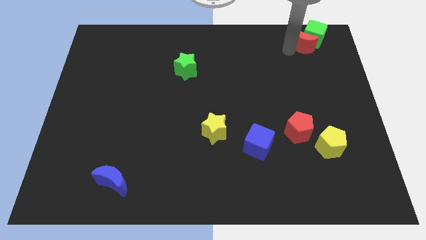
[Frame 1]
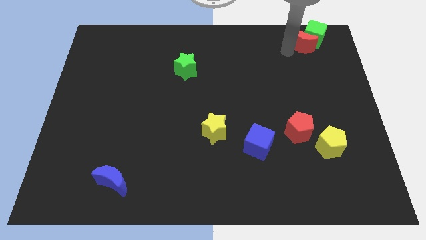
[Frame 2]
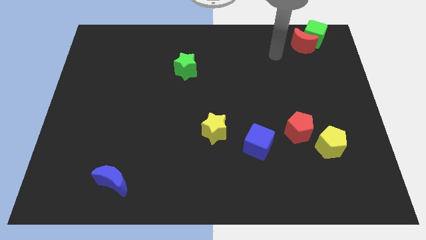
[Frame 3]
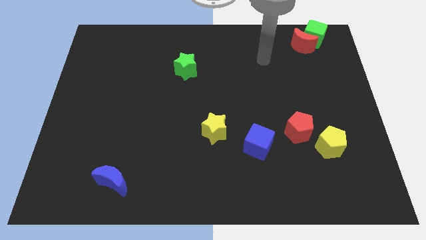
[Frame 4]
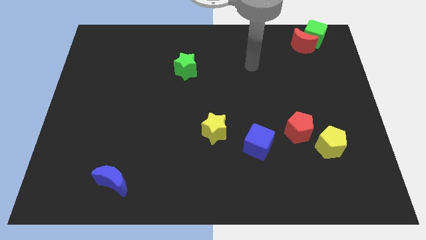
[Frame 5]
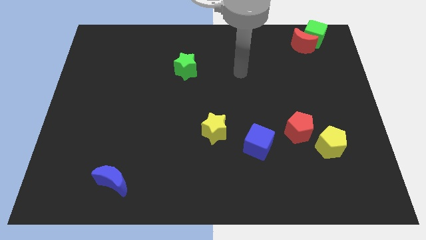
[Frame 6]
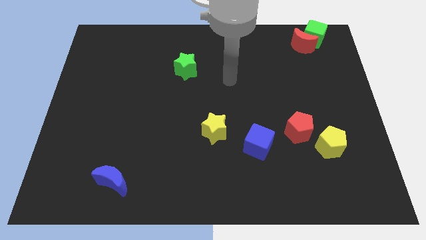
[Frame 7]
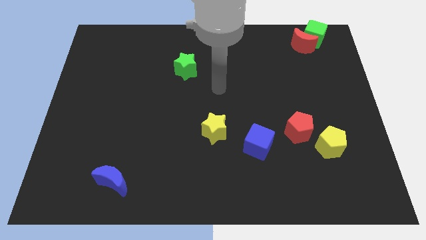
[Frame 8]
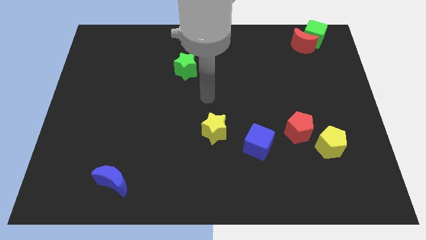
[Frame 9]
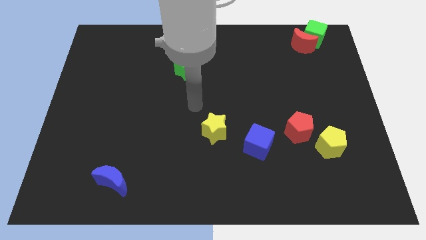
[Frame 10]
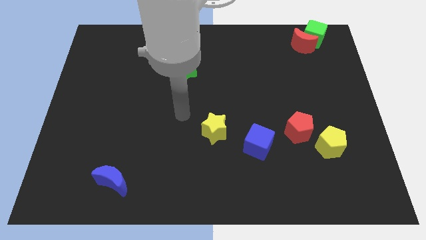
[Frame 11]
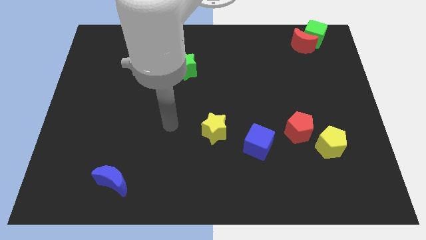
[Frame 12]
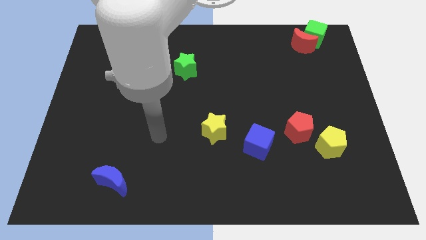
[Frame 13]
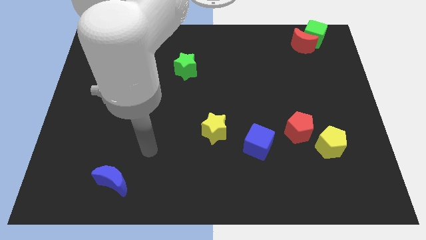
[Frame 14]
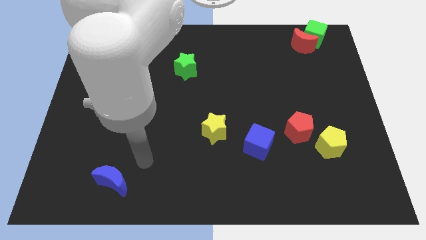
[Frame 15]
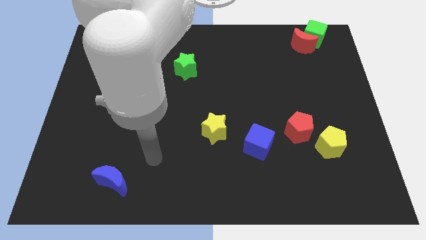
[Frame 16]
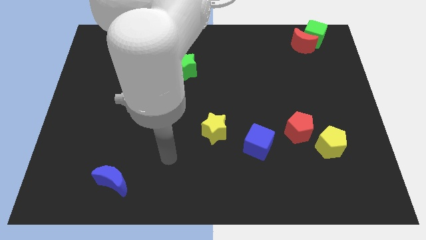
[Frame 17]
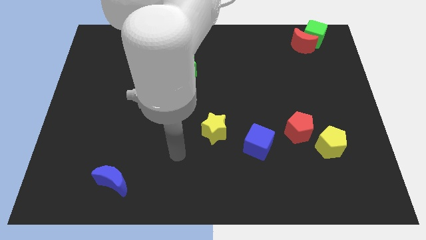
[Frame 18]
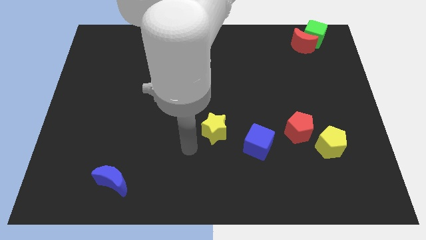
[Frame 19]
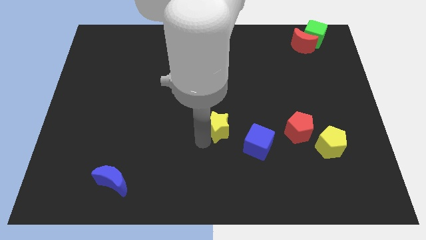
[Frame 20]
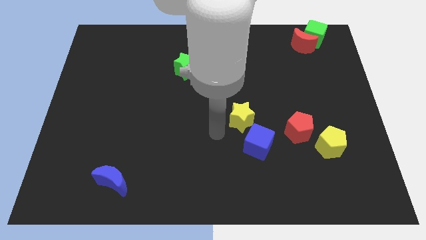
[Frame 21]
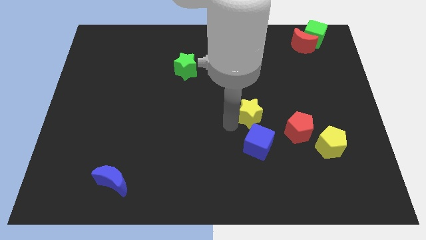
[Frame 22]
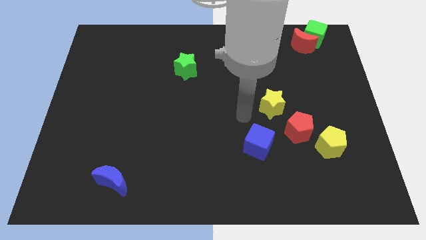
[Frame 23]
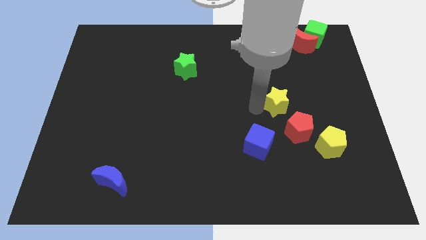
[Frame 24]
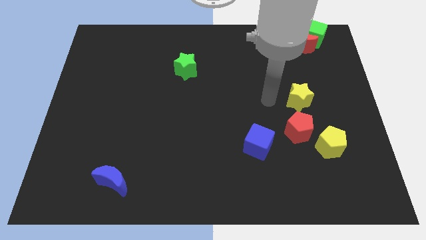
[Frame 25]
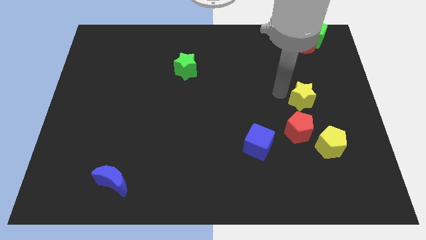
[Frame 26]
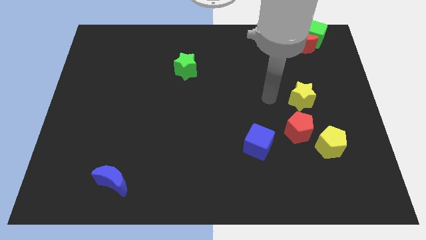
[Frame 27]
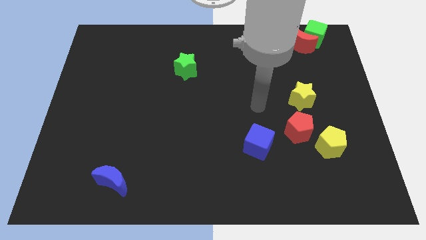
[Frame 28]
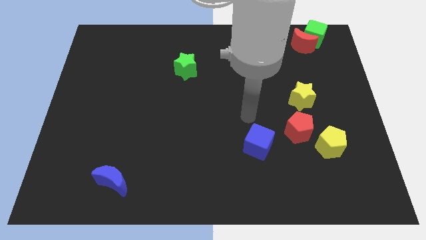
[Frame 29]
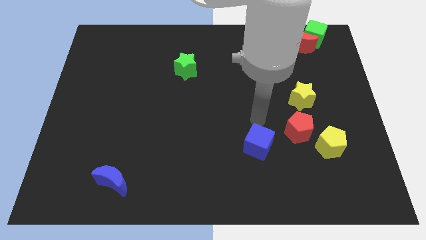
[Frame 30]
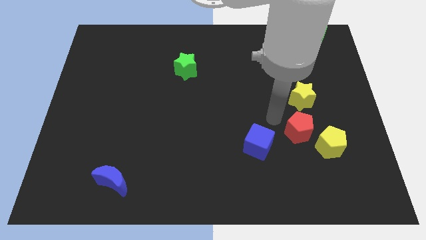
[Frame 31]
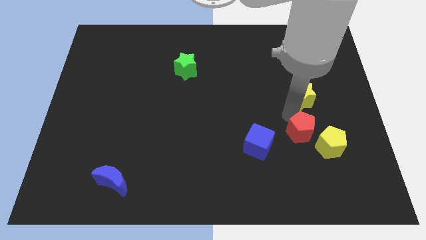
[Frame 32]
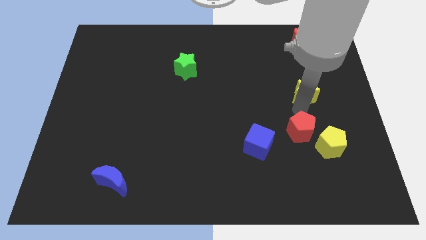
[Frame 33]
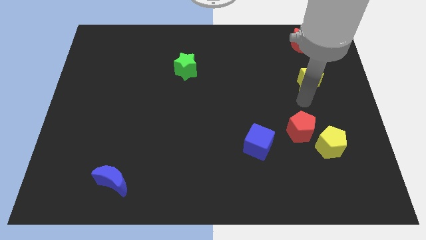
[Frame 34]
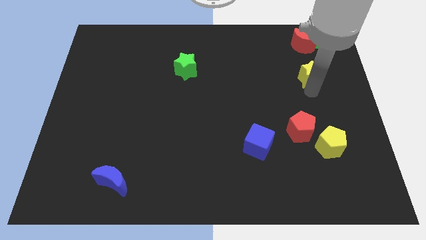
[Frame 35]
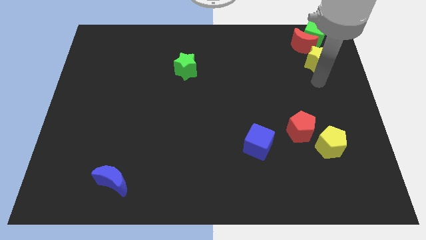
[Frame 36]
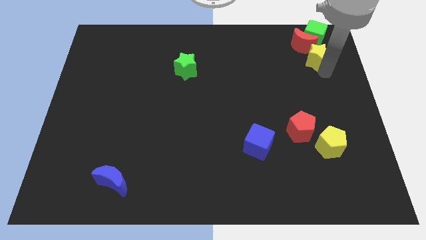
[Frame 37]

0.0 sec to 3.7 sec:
push the yellow star to the right side of the board

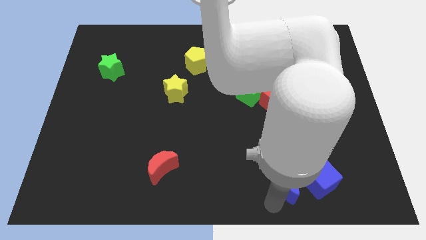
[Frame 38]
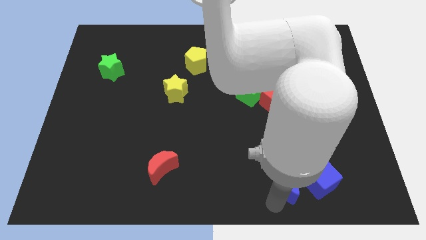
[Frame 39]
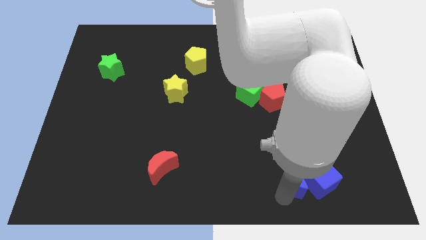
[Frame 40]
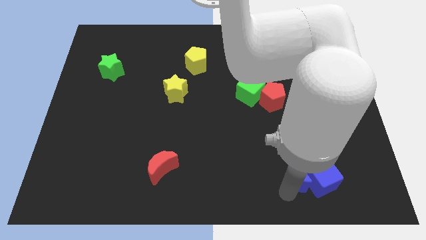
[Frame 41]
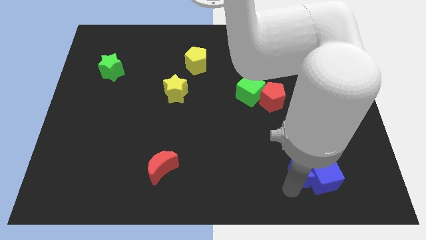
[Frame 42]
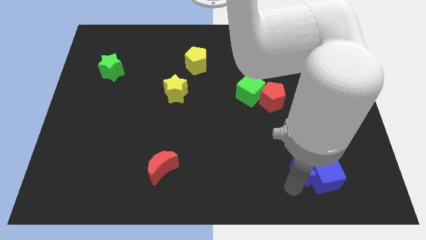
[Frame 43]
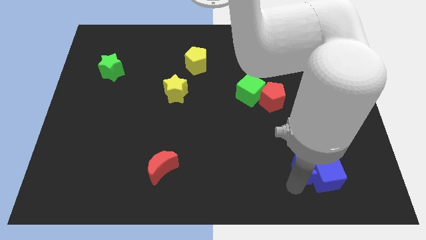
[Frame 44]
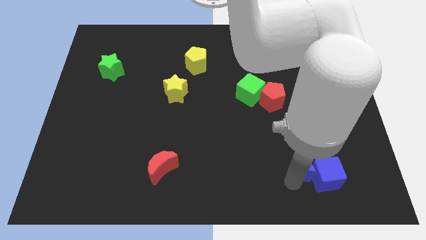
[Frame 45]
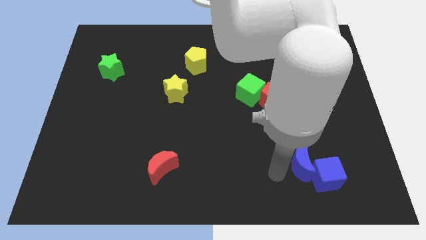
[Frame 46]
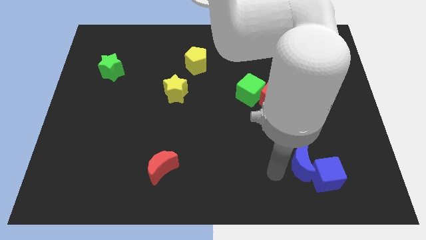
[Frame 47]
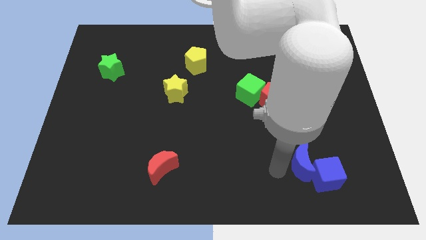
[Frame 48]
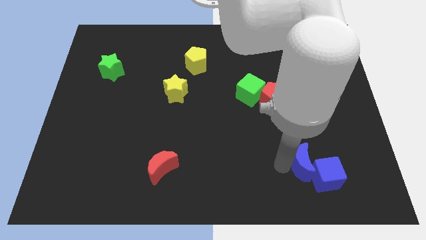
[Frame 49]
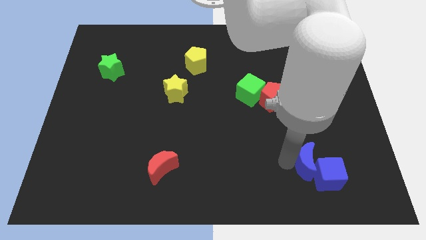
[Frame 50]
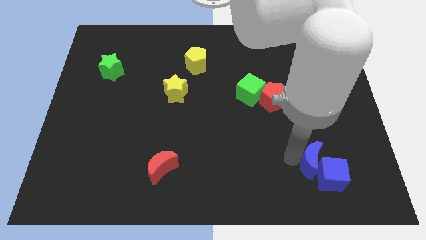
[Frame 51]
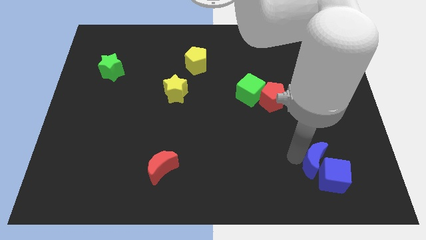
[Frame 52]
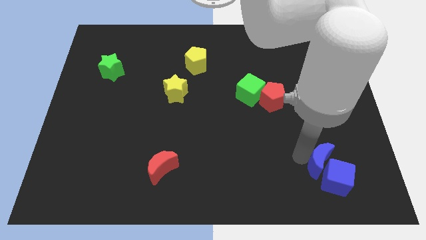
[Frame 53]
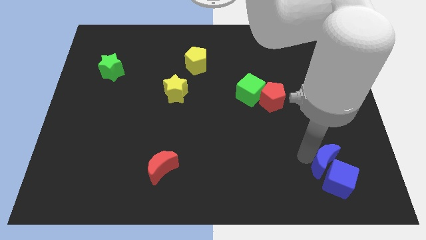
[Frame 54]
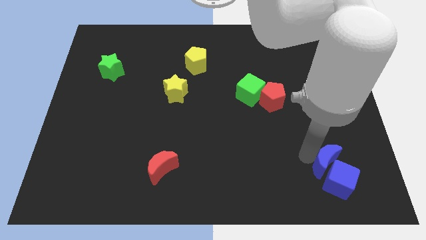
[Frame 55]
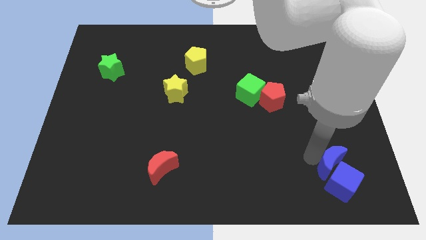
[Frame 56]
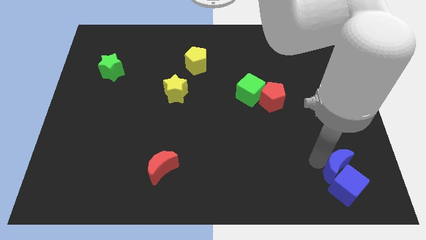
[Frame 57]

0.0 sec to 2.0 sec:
push the blue crescent along with cube towards bottom right

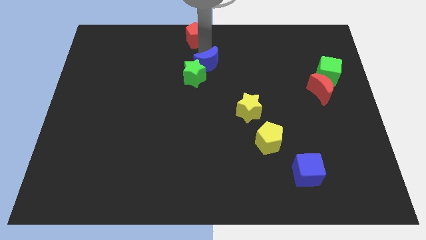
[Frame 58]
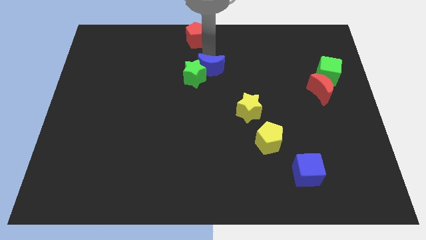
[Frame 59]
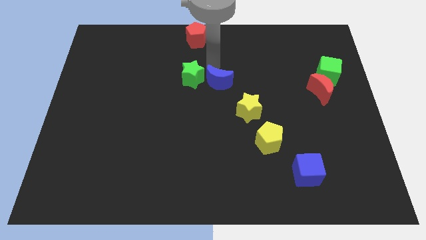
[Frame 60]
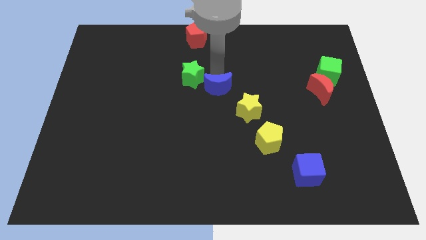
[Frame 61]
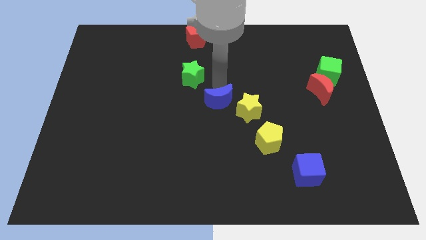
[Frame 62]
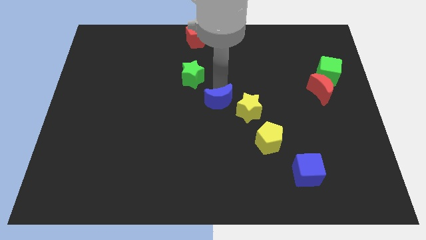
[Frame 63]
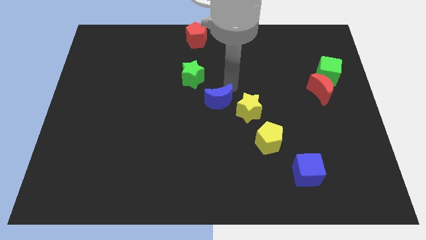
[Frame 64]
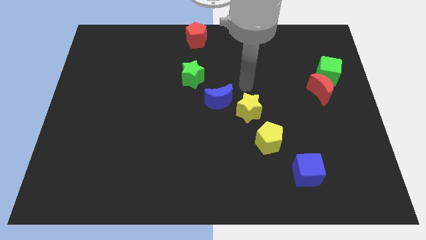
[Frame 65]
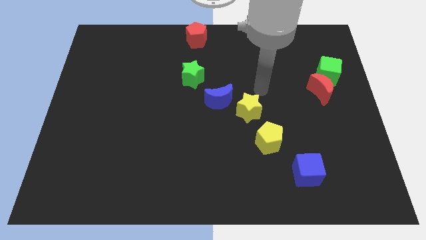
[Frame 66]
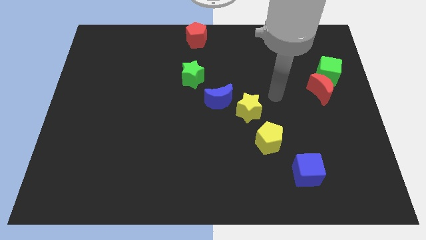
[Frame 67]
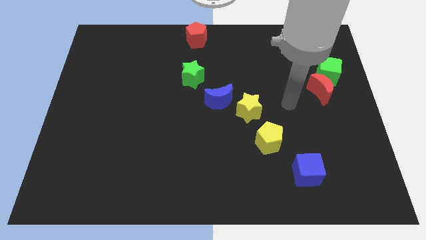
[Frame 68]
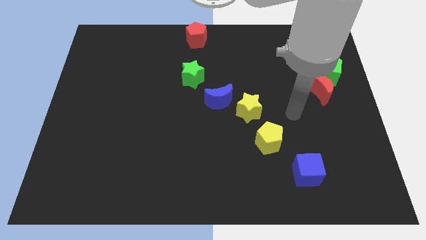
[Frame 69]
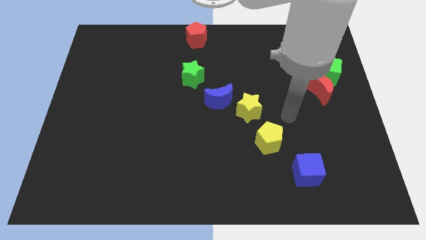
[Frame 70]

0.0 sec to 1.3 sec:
move the blue moon near to the yellow star

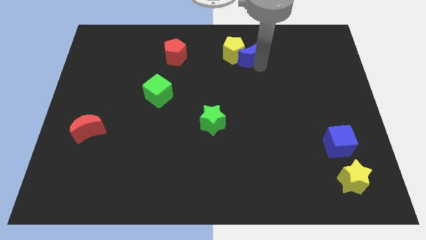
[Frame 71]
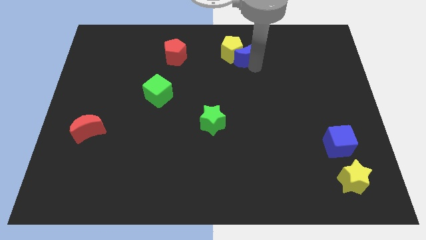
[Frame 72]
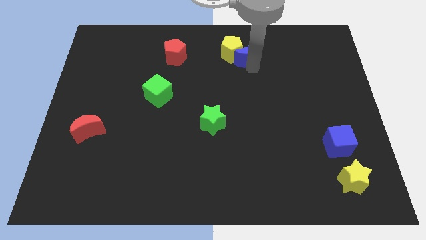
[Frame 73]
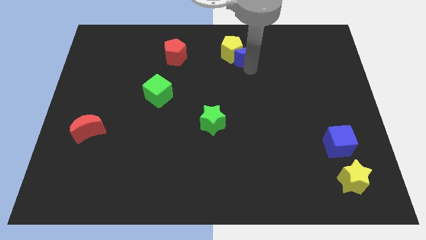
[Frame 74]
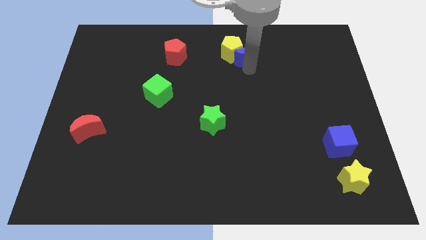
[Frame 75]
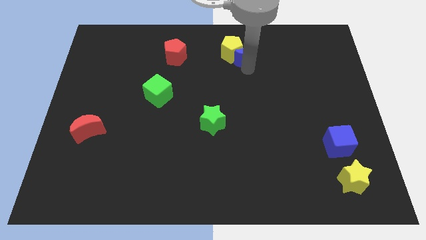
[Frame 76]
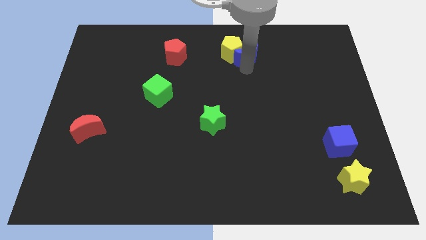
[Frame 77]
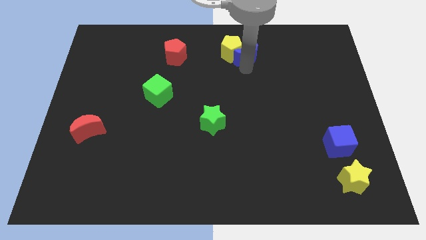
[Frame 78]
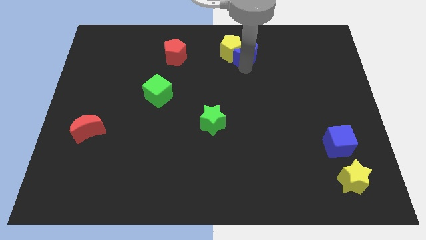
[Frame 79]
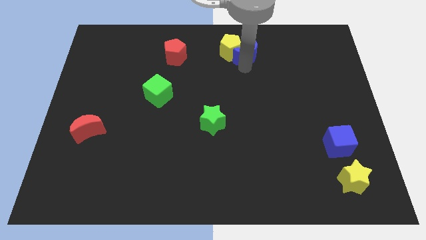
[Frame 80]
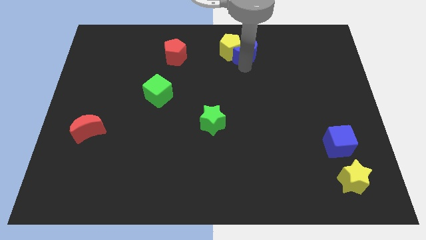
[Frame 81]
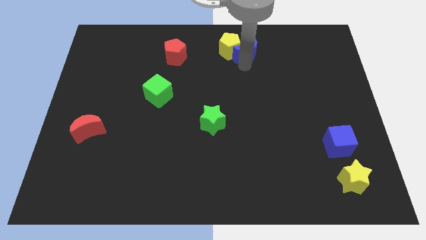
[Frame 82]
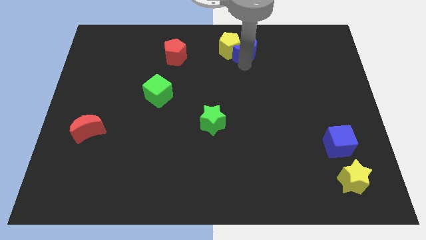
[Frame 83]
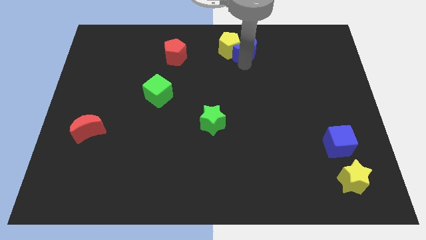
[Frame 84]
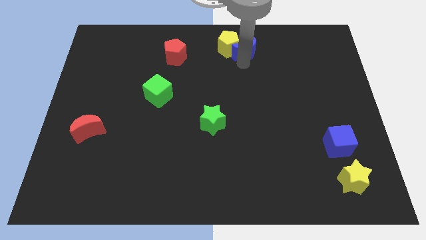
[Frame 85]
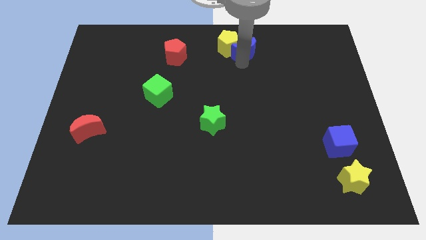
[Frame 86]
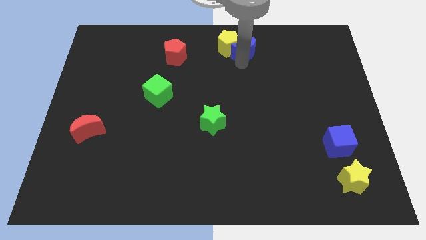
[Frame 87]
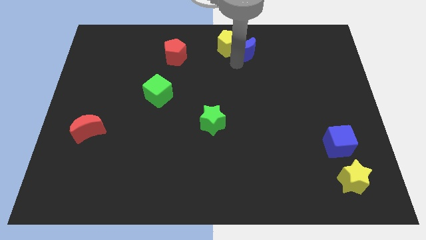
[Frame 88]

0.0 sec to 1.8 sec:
push the blue crescent along with the yellow pentagon slightly to the top
